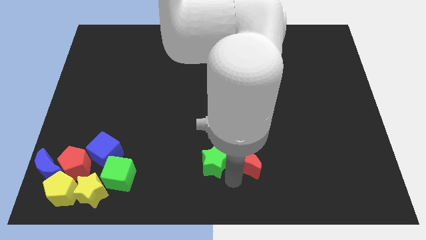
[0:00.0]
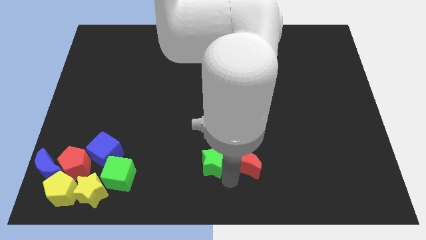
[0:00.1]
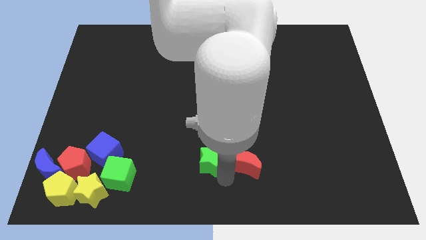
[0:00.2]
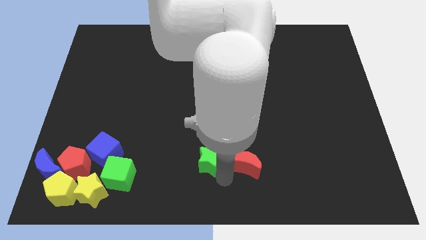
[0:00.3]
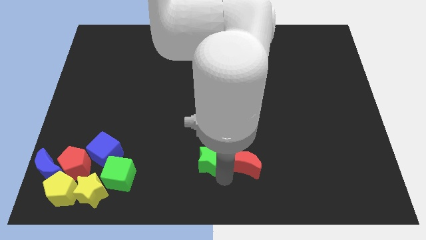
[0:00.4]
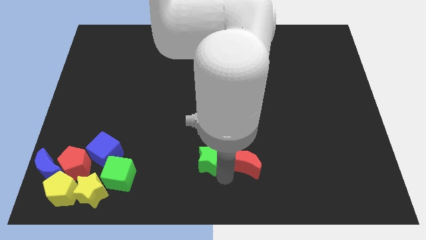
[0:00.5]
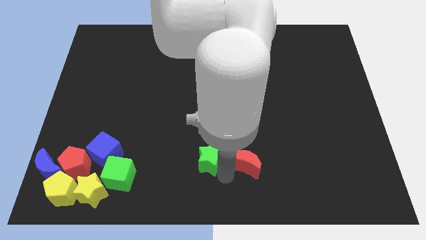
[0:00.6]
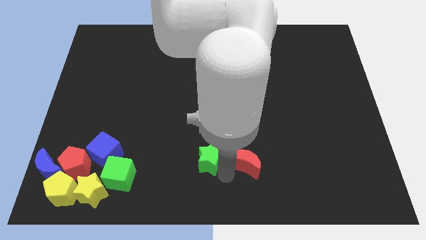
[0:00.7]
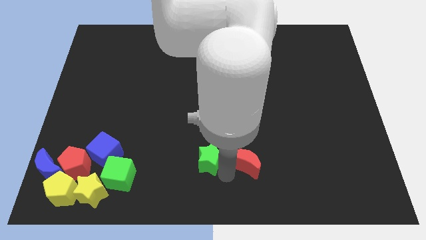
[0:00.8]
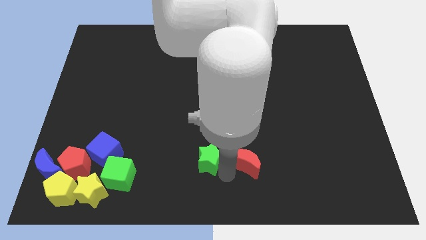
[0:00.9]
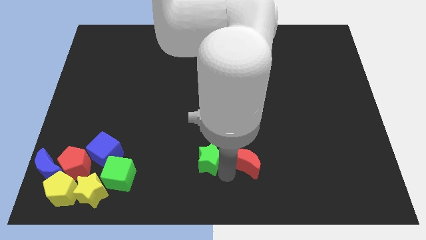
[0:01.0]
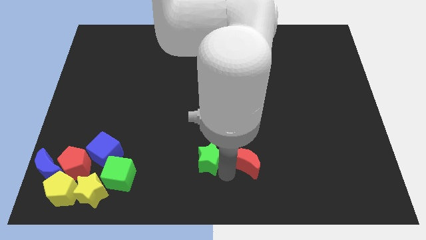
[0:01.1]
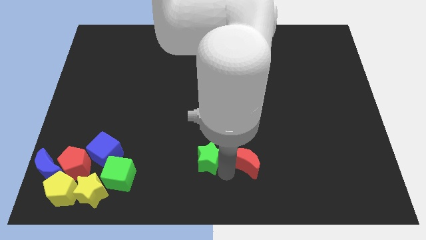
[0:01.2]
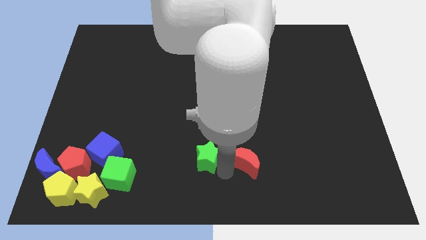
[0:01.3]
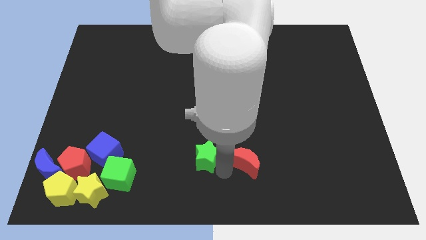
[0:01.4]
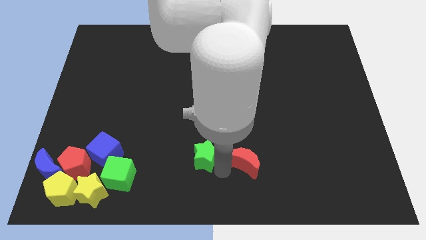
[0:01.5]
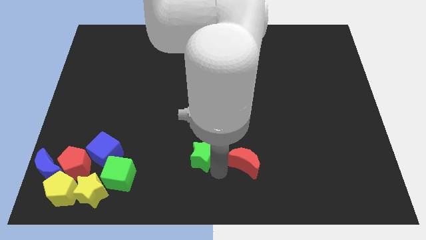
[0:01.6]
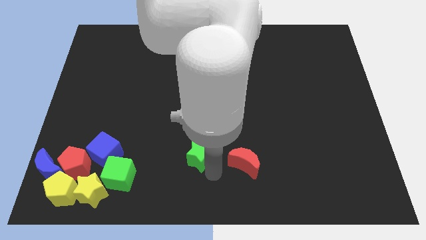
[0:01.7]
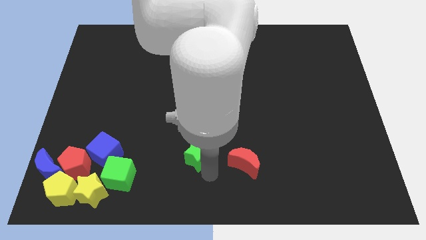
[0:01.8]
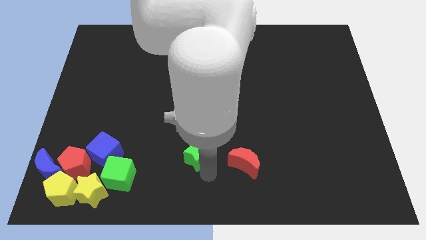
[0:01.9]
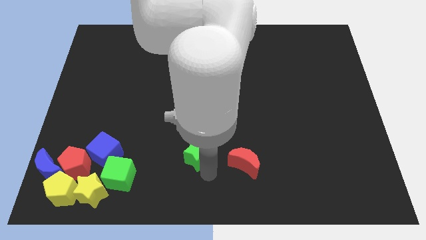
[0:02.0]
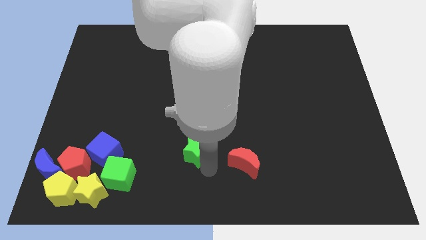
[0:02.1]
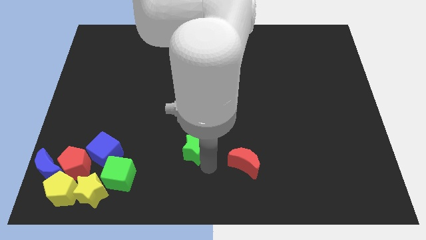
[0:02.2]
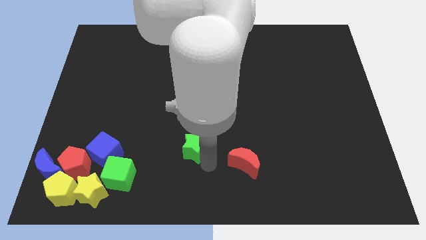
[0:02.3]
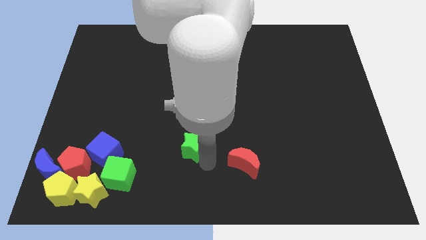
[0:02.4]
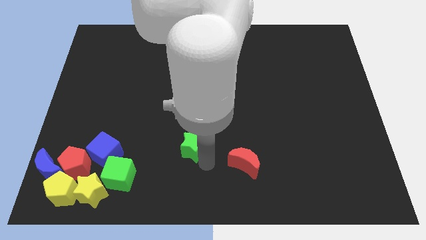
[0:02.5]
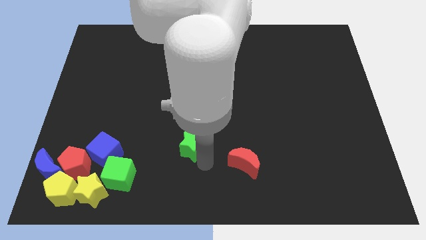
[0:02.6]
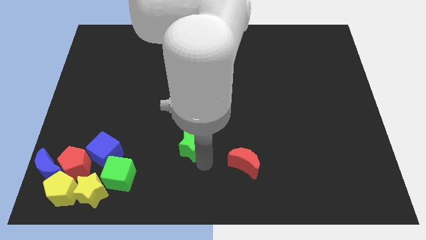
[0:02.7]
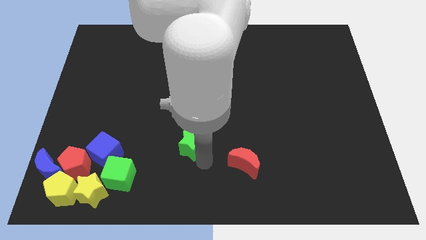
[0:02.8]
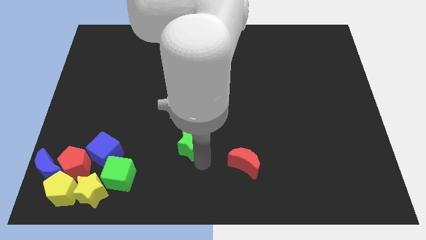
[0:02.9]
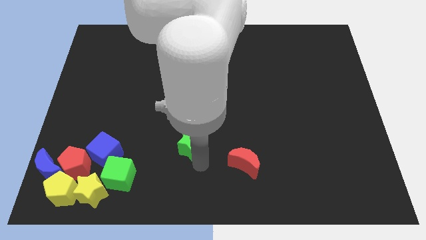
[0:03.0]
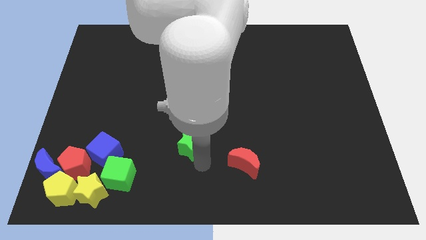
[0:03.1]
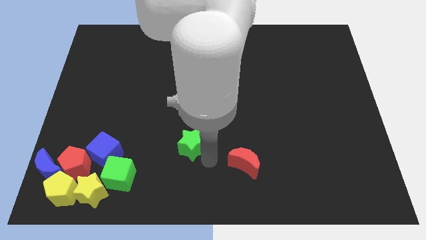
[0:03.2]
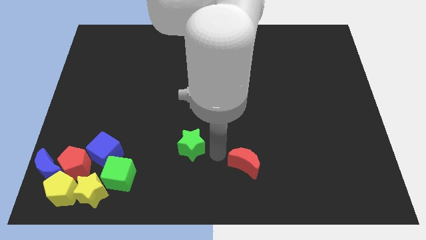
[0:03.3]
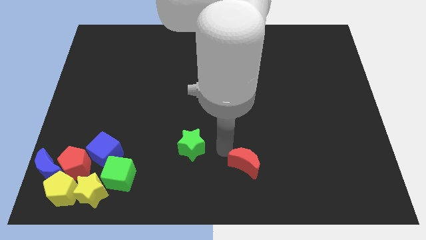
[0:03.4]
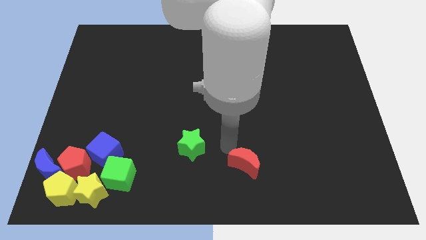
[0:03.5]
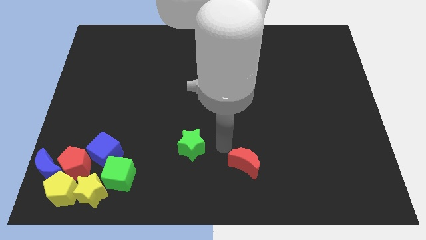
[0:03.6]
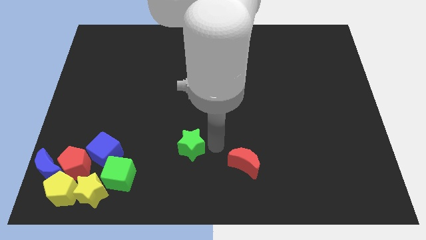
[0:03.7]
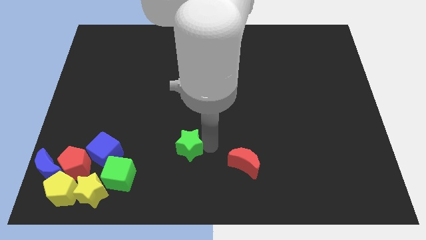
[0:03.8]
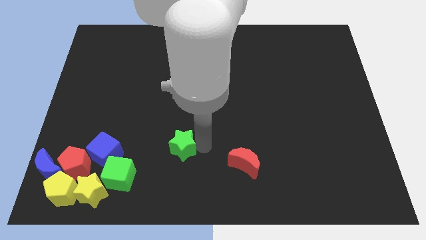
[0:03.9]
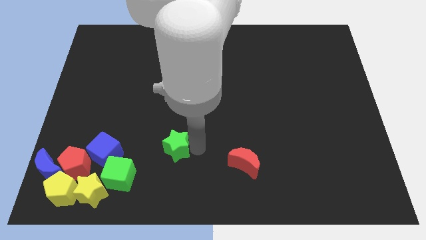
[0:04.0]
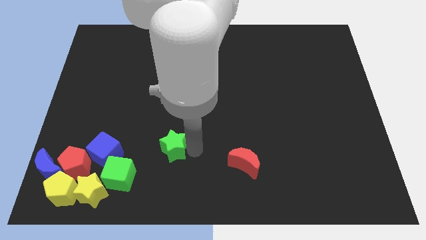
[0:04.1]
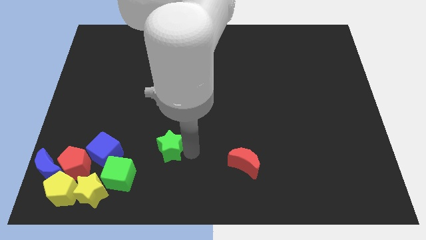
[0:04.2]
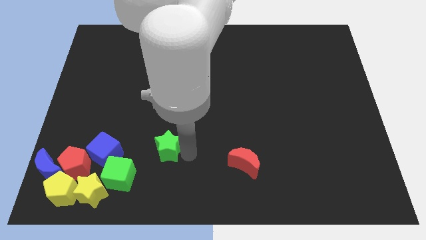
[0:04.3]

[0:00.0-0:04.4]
separate the green star from the red crescent

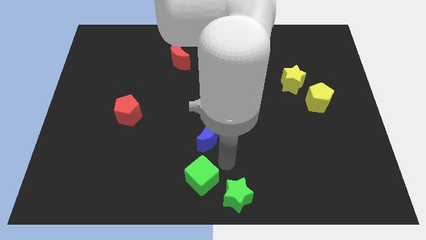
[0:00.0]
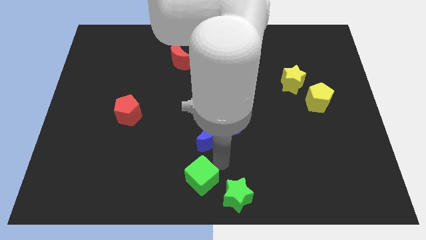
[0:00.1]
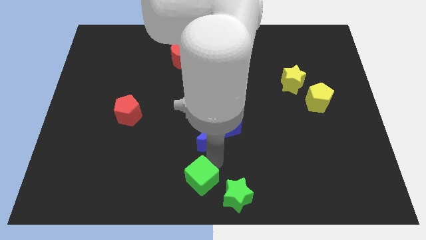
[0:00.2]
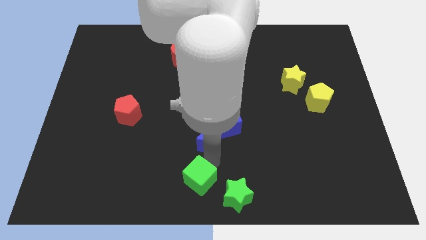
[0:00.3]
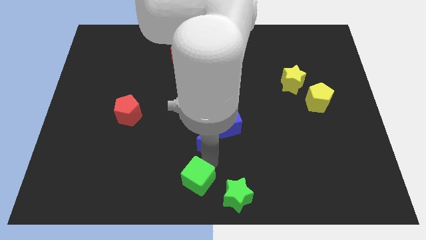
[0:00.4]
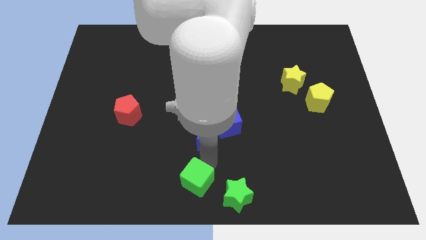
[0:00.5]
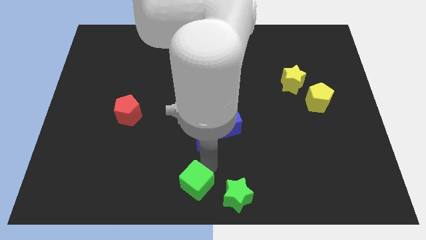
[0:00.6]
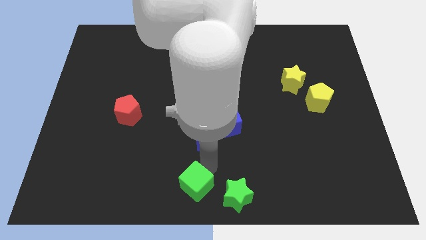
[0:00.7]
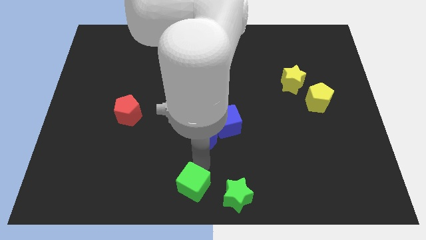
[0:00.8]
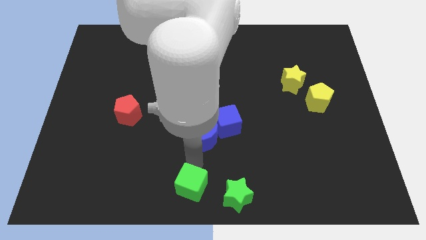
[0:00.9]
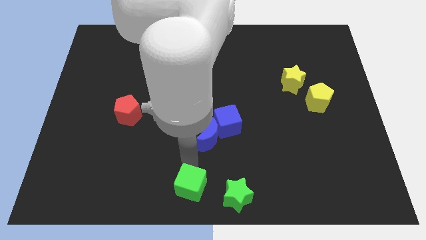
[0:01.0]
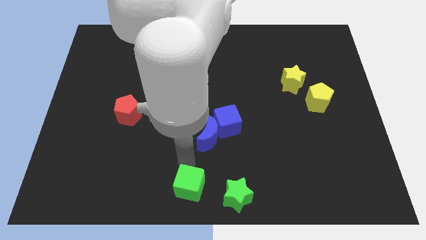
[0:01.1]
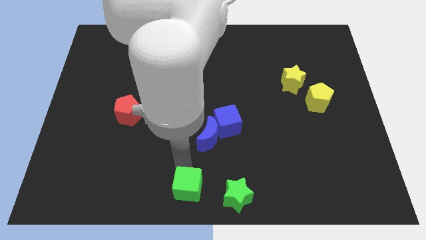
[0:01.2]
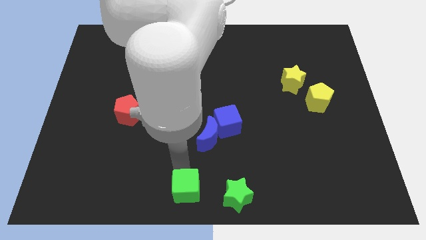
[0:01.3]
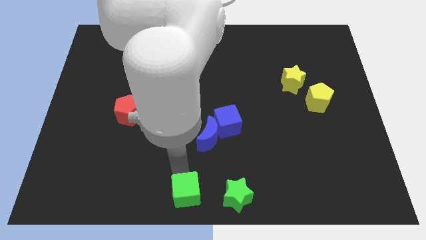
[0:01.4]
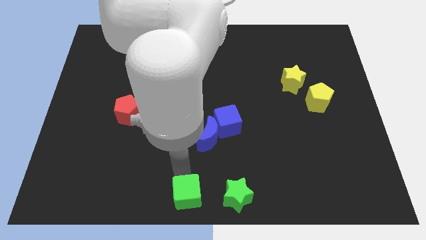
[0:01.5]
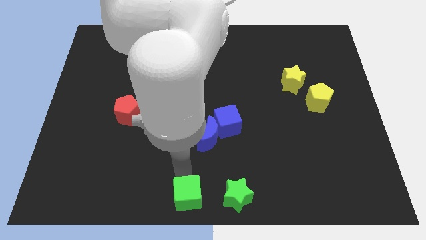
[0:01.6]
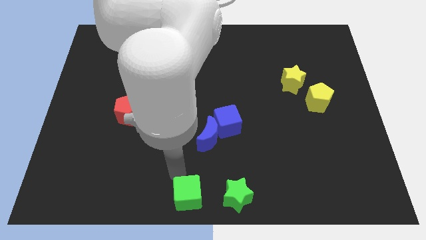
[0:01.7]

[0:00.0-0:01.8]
move the green cube to the left side of the green star

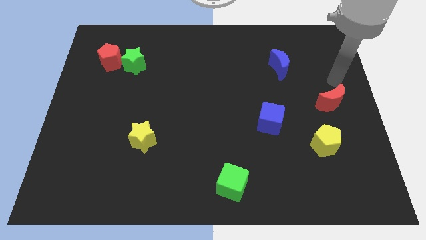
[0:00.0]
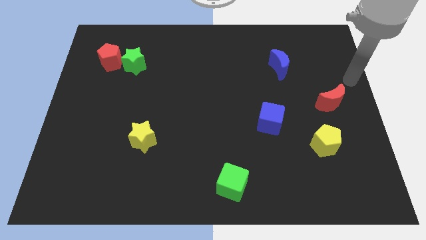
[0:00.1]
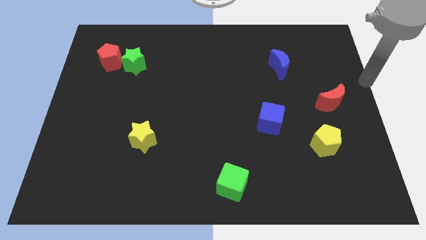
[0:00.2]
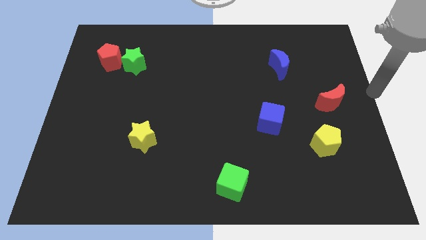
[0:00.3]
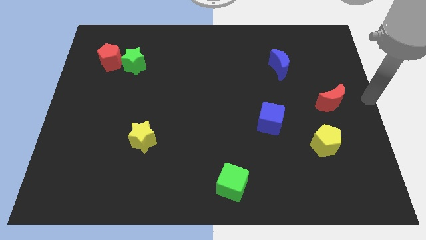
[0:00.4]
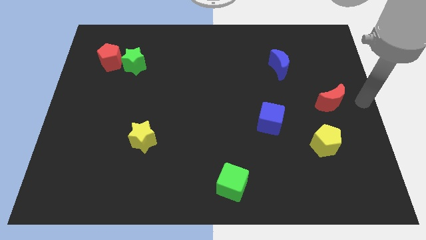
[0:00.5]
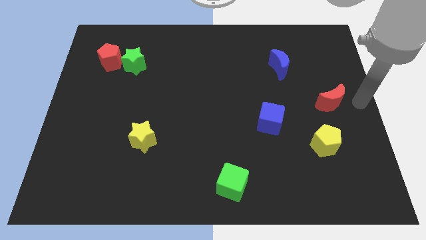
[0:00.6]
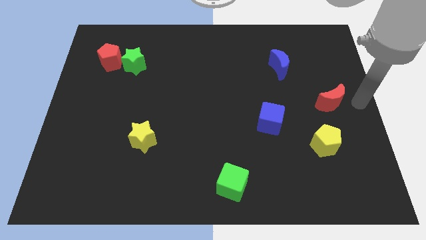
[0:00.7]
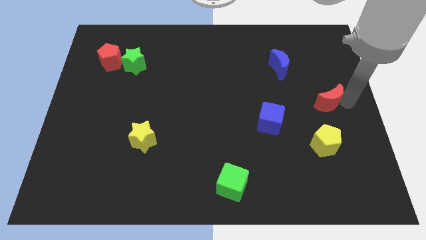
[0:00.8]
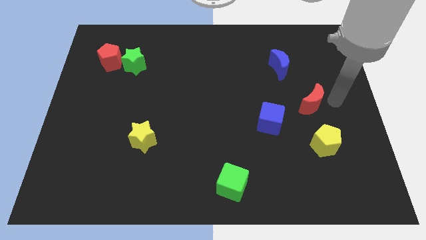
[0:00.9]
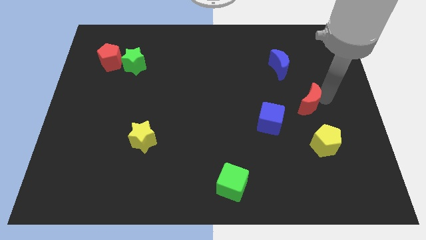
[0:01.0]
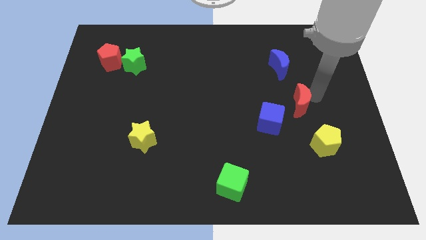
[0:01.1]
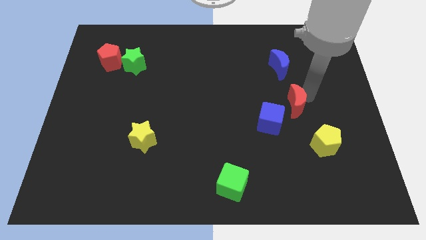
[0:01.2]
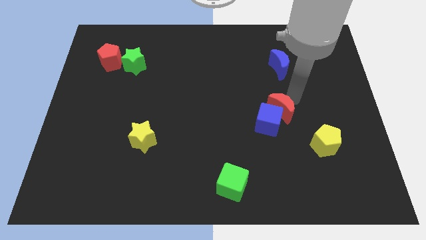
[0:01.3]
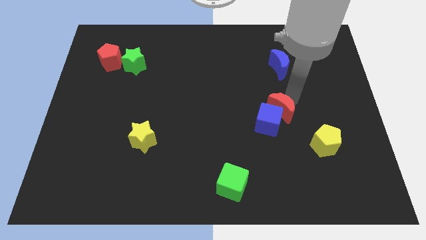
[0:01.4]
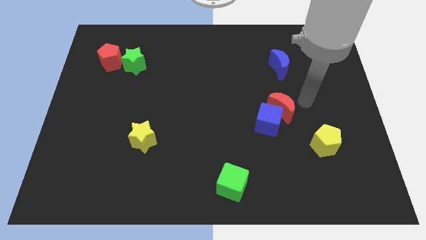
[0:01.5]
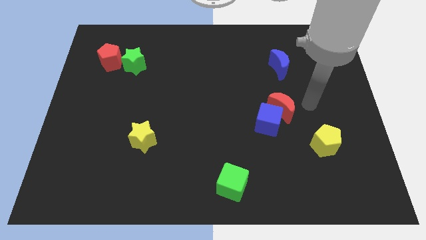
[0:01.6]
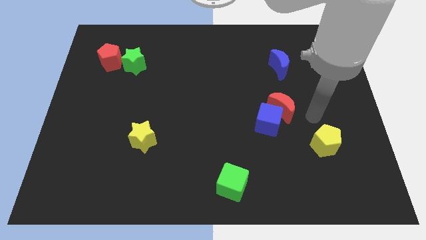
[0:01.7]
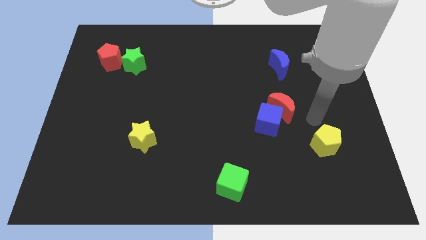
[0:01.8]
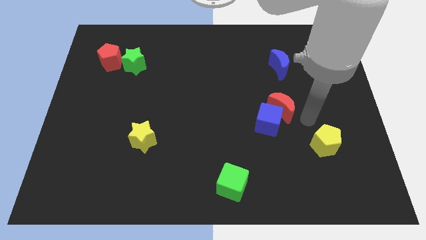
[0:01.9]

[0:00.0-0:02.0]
push the red moon into the blue cube

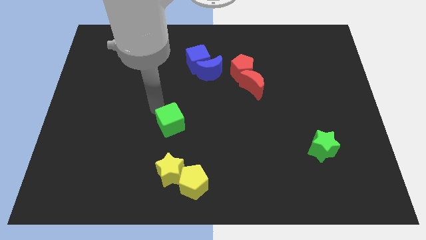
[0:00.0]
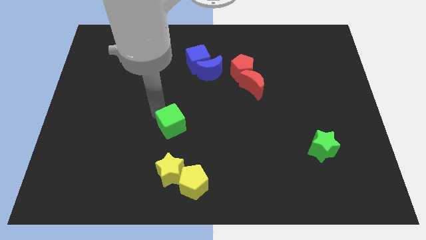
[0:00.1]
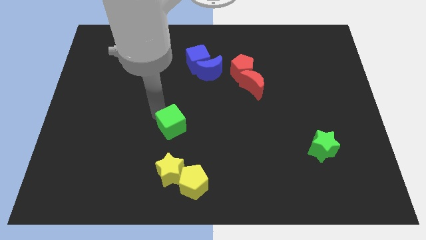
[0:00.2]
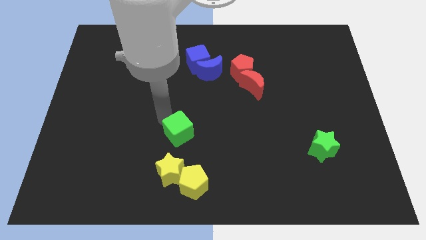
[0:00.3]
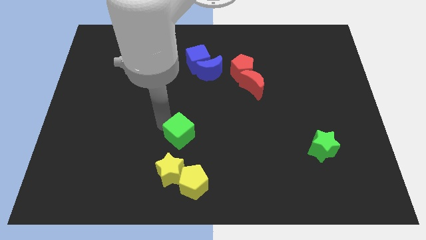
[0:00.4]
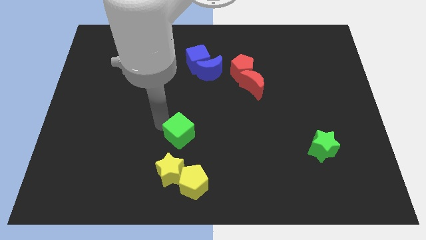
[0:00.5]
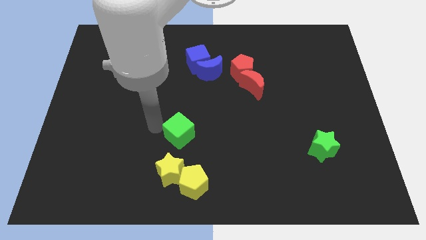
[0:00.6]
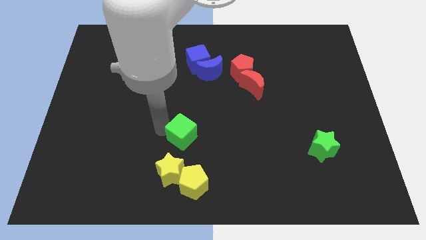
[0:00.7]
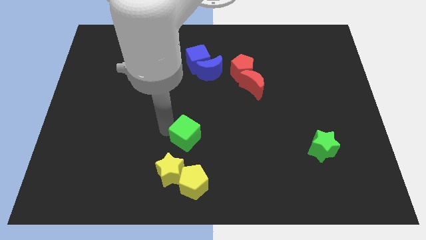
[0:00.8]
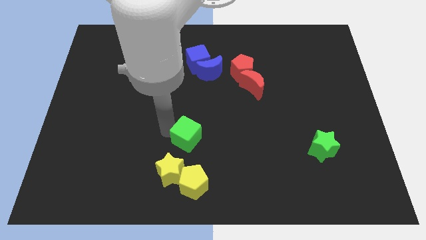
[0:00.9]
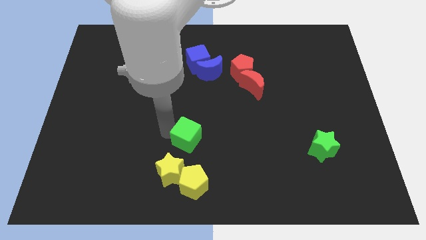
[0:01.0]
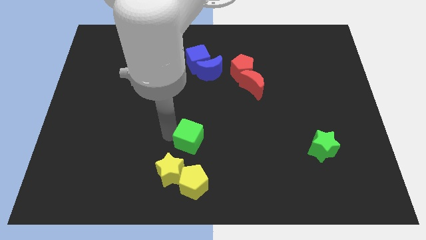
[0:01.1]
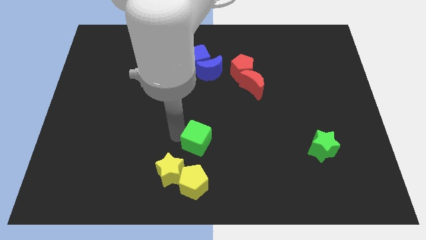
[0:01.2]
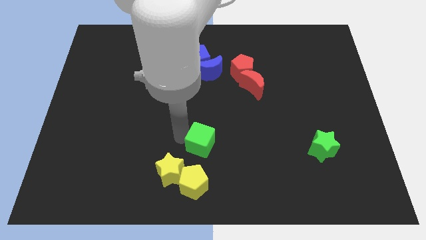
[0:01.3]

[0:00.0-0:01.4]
place the green cube above the yellow pentagon
